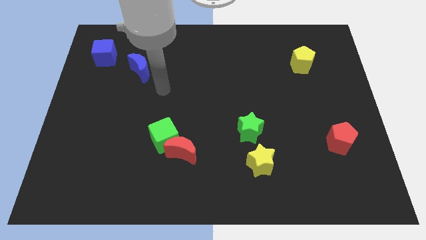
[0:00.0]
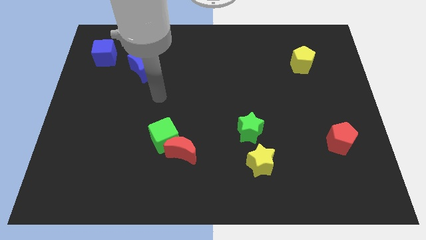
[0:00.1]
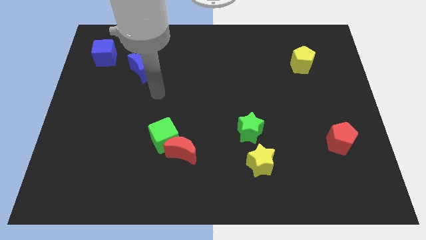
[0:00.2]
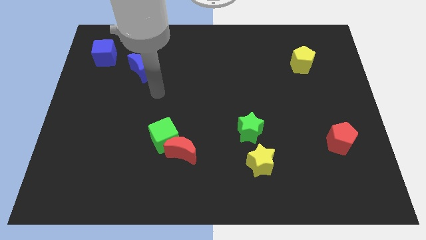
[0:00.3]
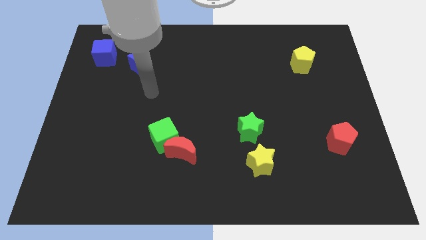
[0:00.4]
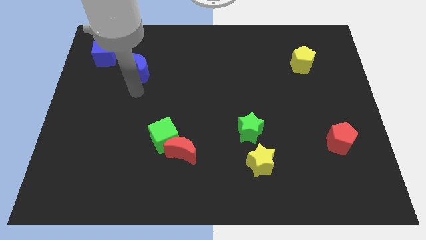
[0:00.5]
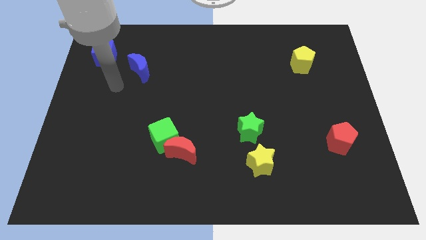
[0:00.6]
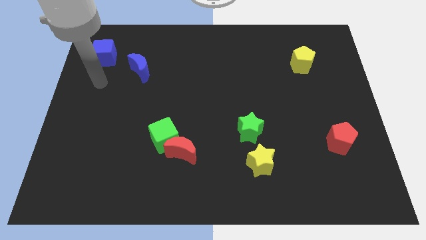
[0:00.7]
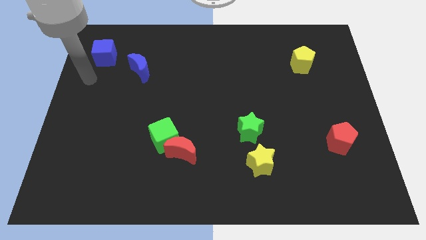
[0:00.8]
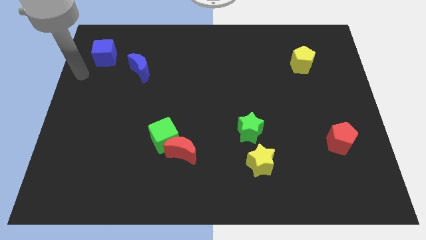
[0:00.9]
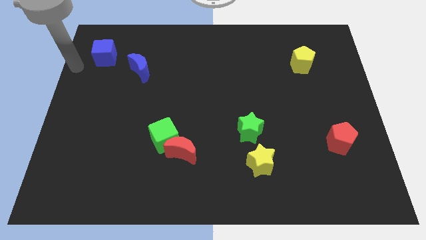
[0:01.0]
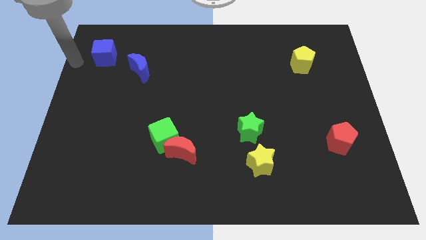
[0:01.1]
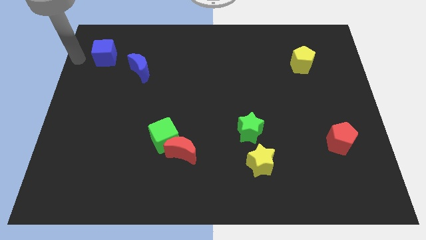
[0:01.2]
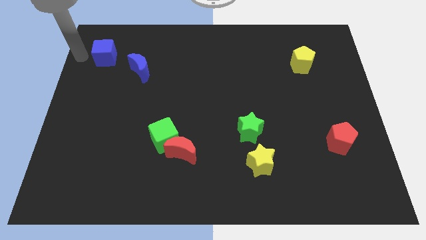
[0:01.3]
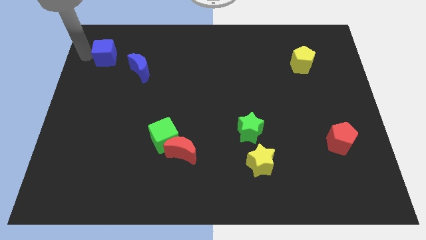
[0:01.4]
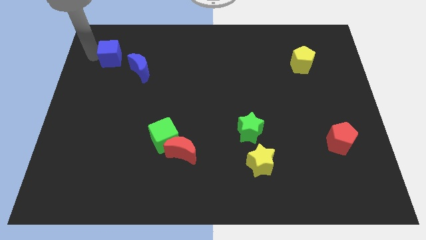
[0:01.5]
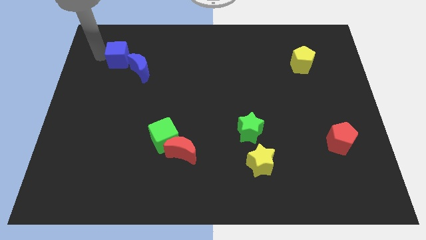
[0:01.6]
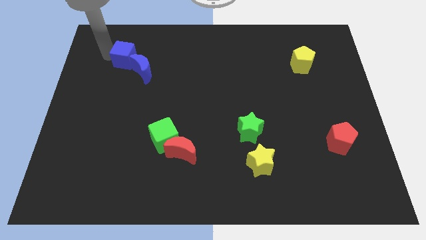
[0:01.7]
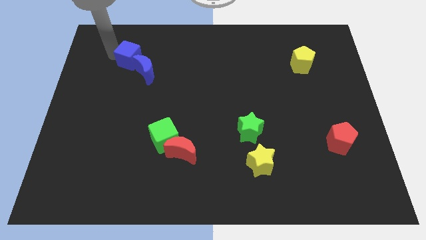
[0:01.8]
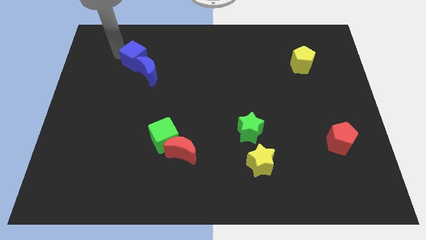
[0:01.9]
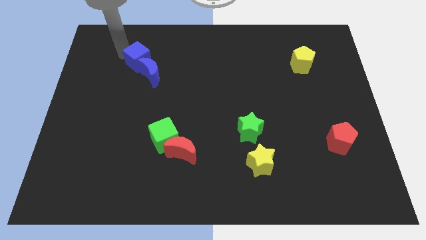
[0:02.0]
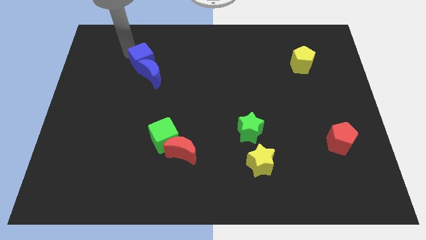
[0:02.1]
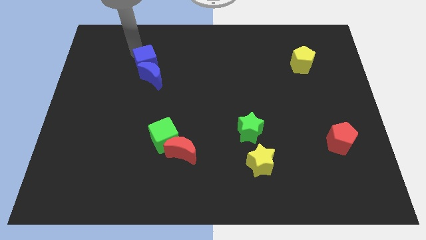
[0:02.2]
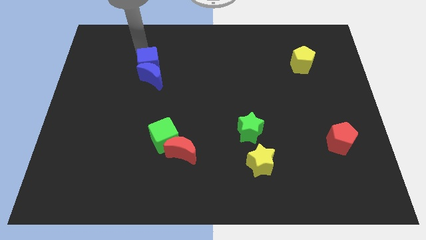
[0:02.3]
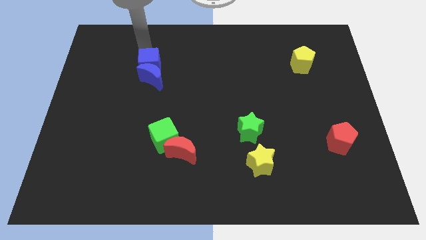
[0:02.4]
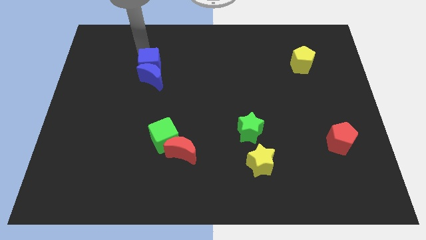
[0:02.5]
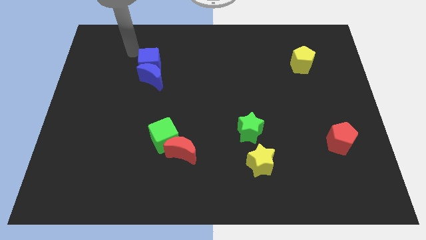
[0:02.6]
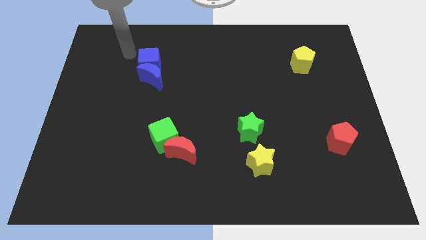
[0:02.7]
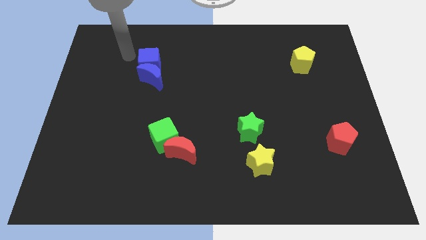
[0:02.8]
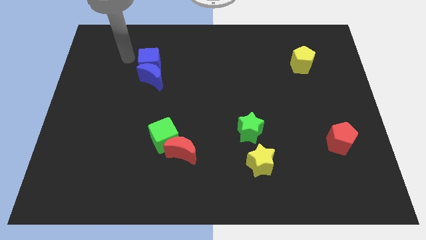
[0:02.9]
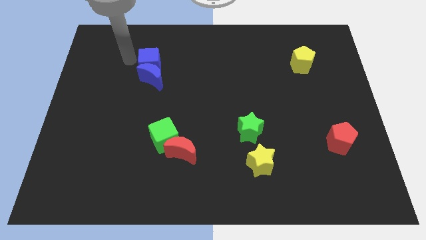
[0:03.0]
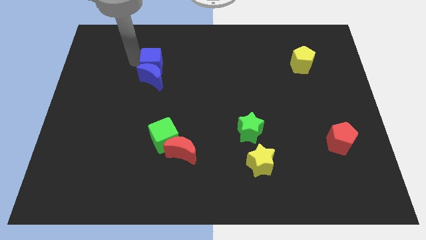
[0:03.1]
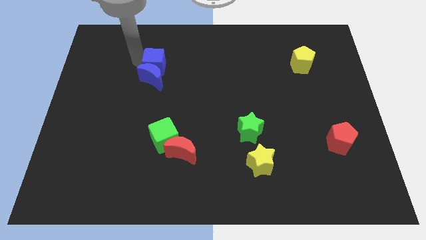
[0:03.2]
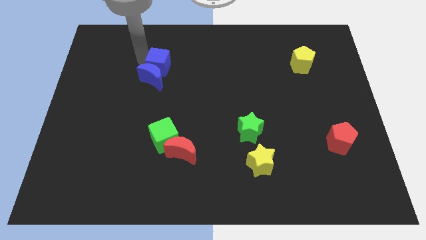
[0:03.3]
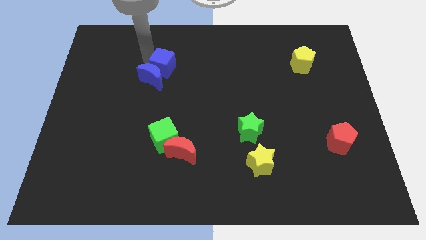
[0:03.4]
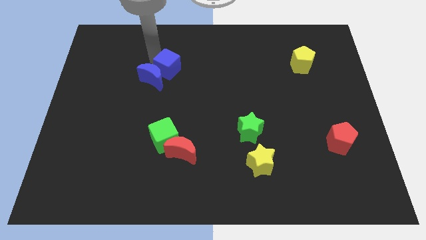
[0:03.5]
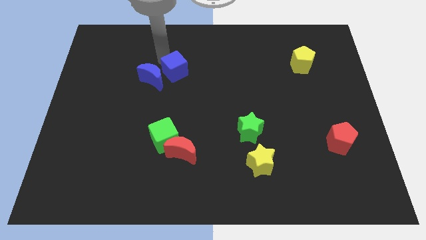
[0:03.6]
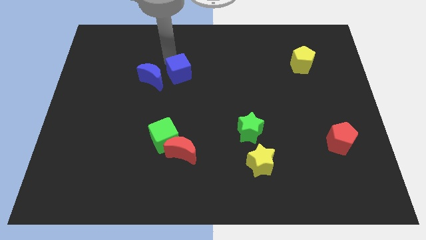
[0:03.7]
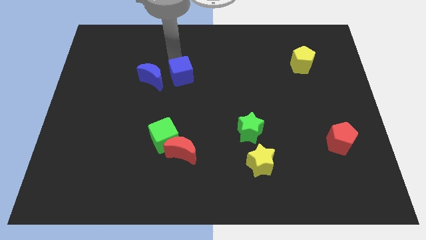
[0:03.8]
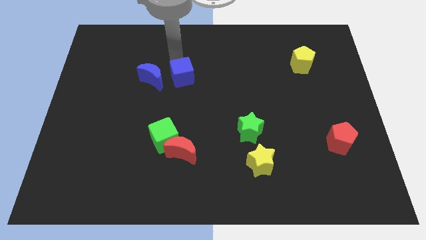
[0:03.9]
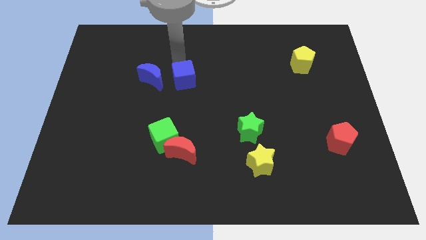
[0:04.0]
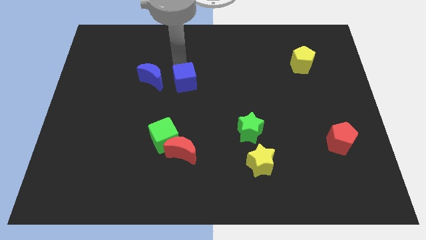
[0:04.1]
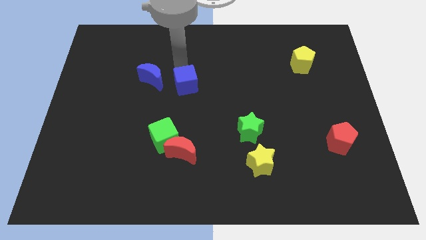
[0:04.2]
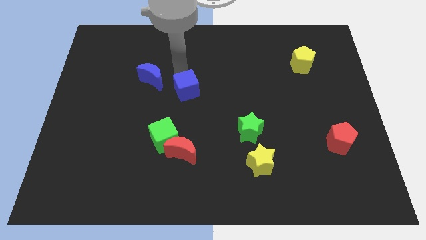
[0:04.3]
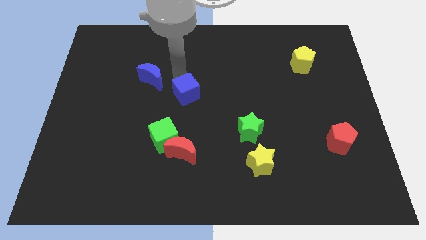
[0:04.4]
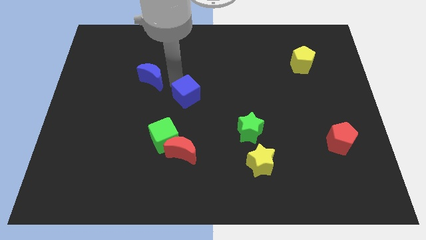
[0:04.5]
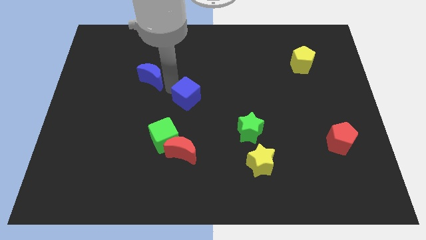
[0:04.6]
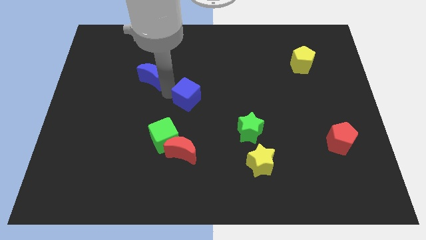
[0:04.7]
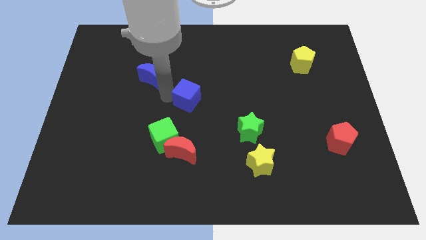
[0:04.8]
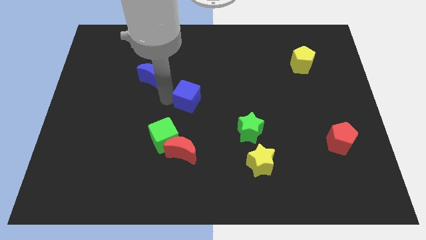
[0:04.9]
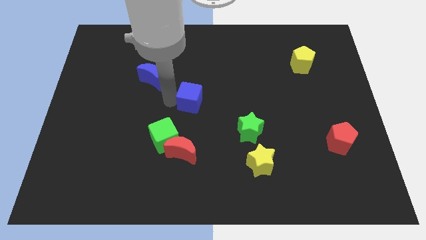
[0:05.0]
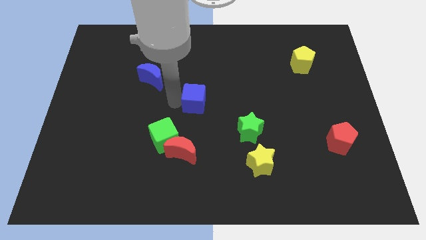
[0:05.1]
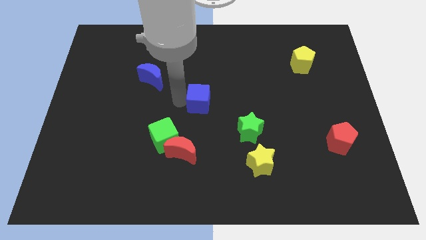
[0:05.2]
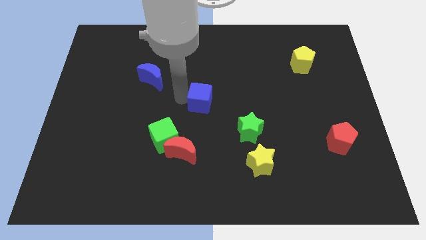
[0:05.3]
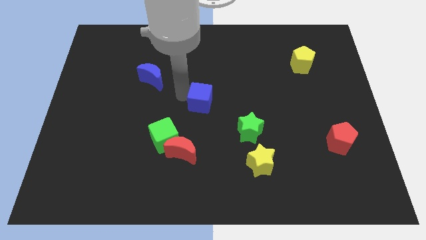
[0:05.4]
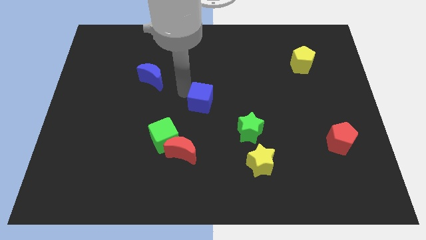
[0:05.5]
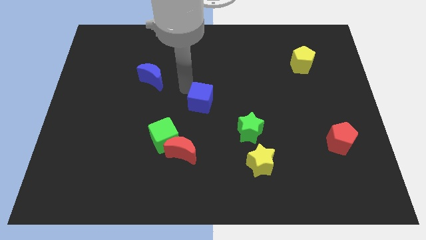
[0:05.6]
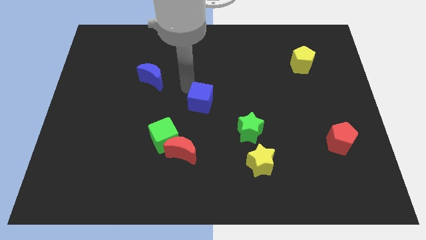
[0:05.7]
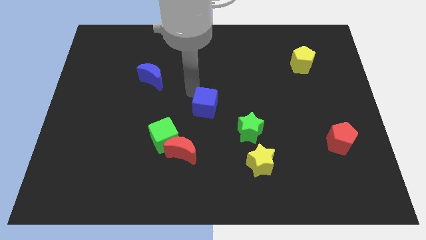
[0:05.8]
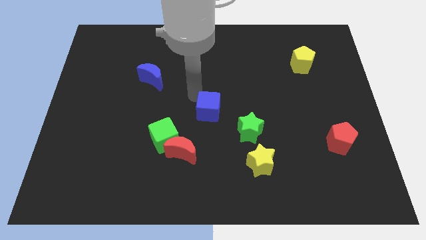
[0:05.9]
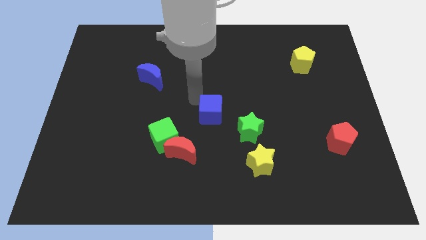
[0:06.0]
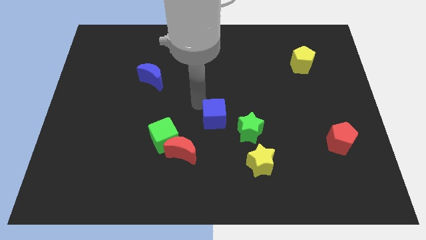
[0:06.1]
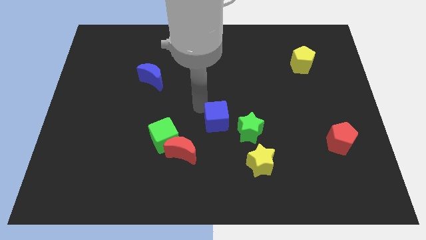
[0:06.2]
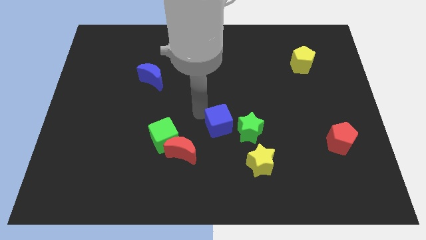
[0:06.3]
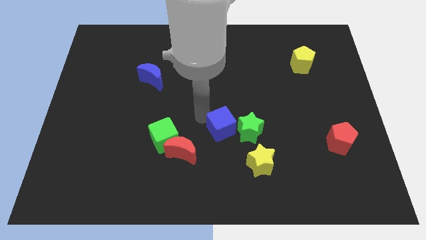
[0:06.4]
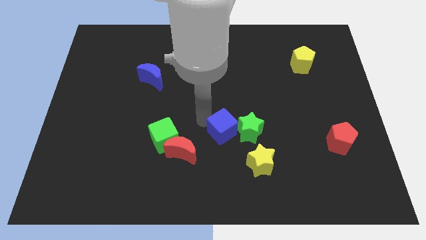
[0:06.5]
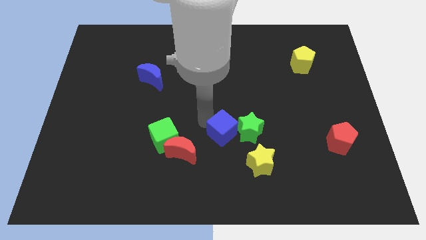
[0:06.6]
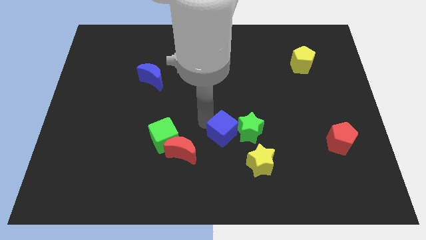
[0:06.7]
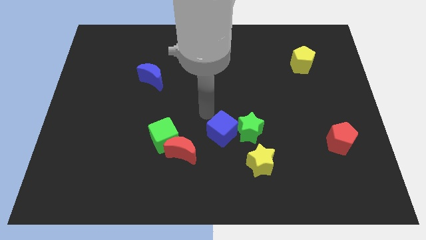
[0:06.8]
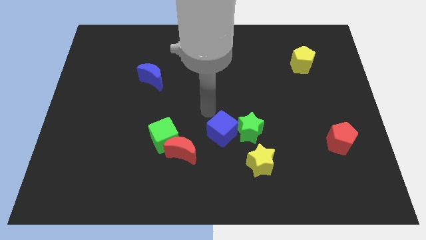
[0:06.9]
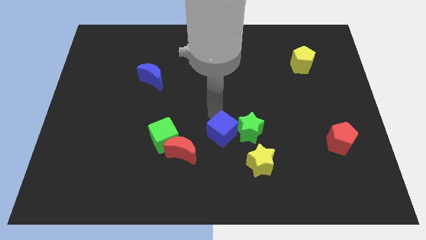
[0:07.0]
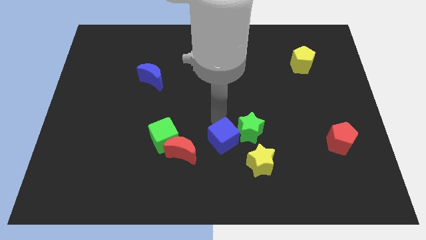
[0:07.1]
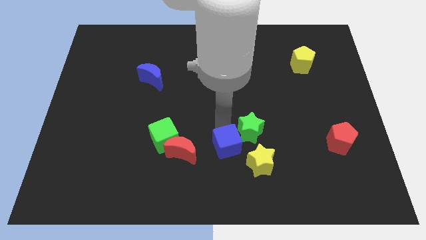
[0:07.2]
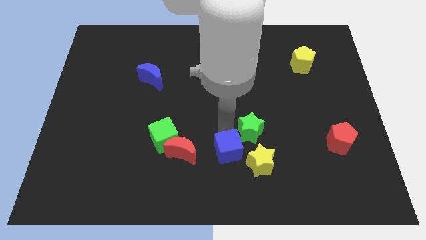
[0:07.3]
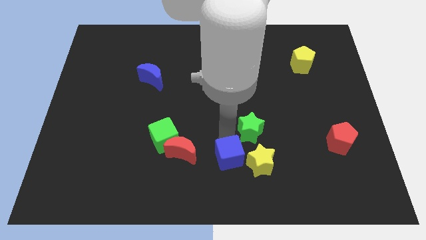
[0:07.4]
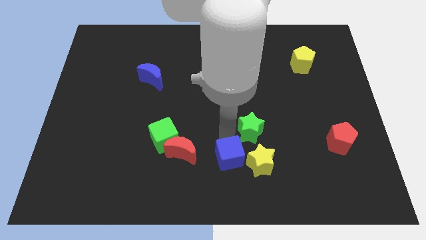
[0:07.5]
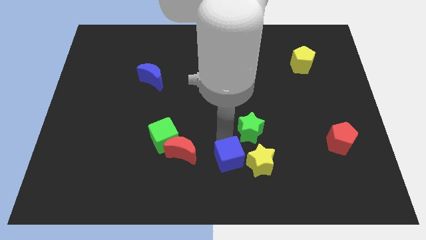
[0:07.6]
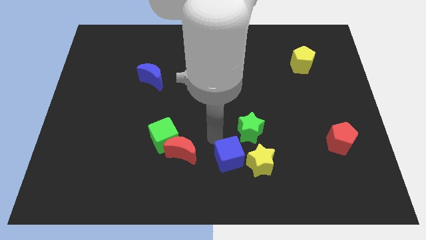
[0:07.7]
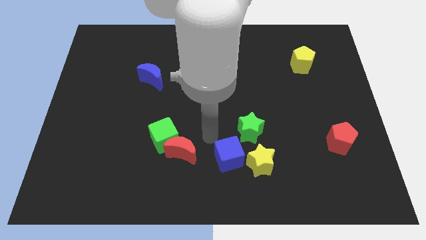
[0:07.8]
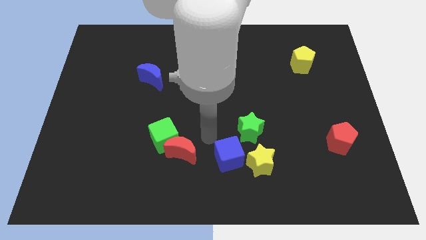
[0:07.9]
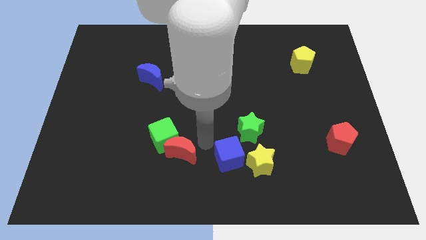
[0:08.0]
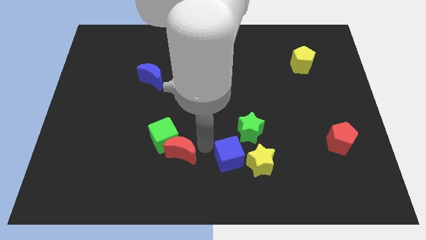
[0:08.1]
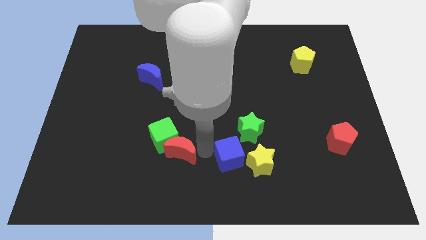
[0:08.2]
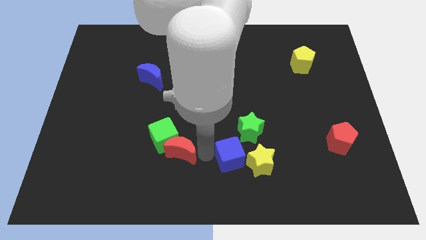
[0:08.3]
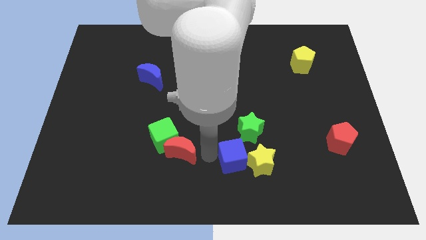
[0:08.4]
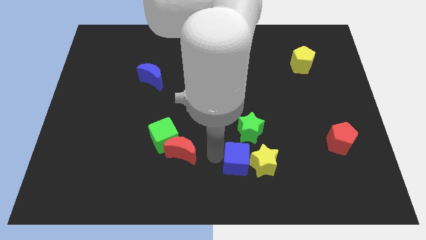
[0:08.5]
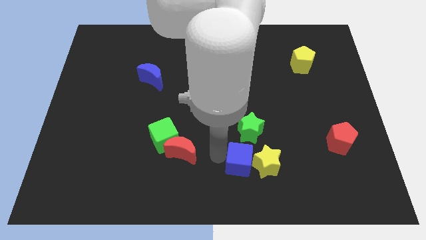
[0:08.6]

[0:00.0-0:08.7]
move the blue cube next to the yellow star
